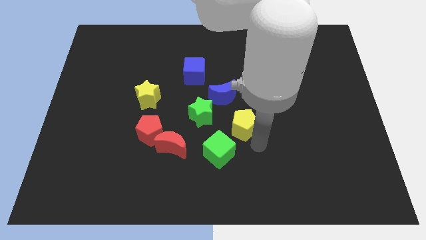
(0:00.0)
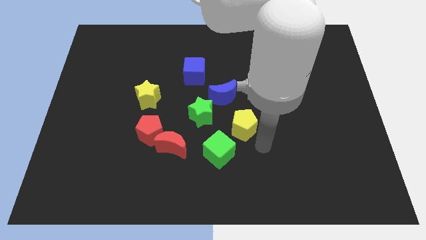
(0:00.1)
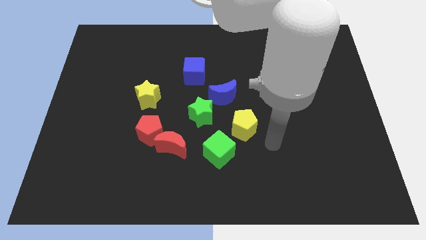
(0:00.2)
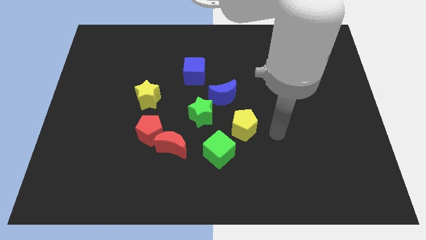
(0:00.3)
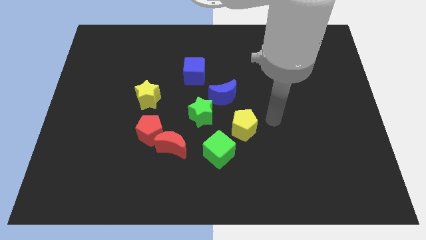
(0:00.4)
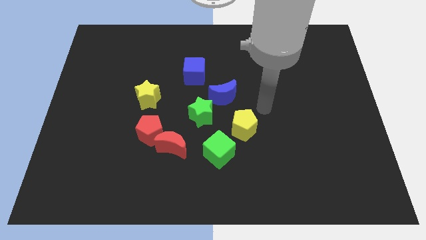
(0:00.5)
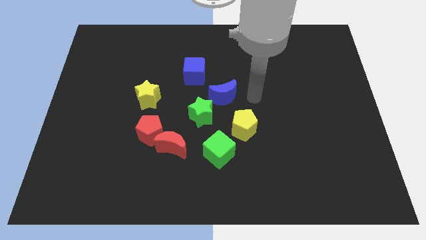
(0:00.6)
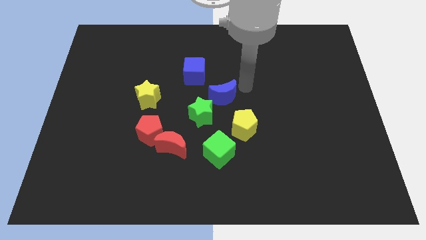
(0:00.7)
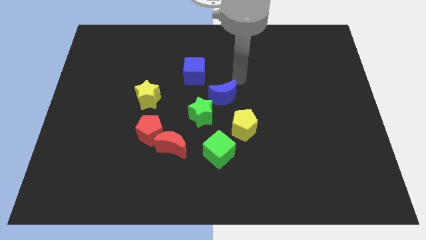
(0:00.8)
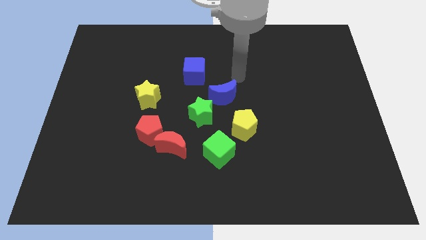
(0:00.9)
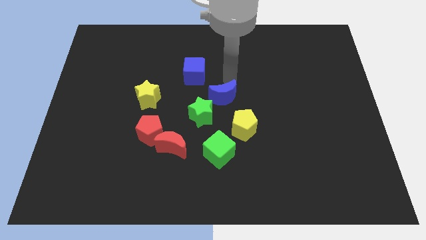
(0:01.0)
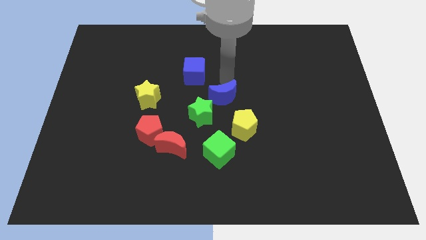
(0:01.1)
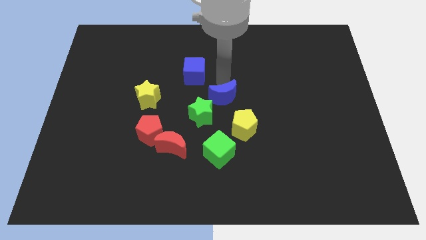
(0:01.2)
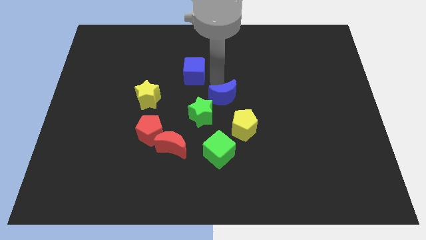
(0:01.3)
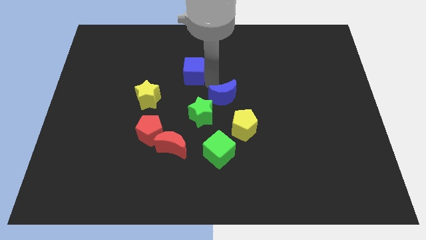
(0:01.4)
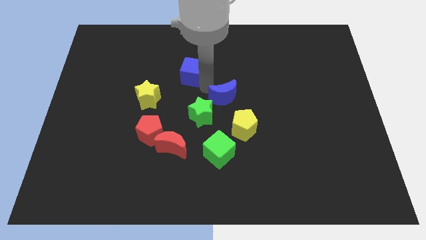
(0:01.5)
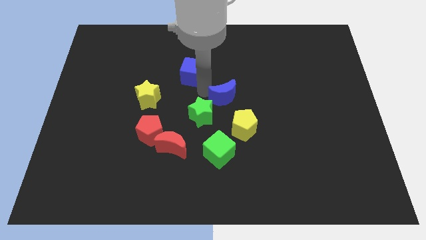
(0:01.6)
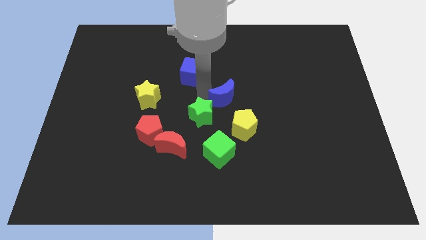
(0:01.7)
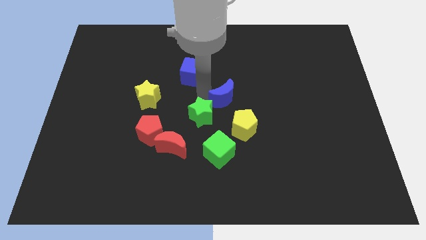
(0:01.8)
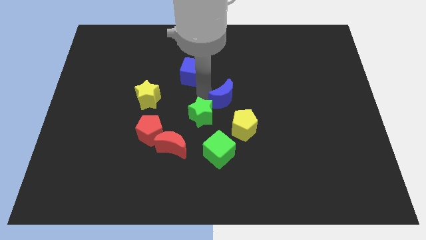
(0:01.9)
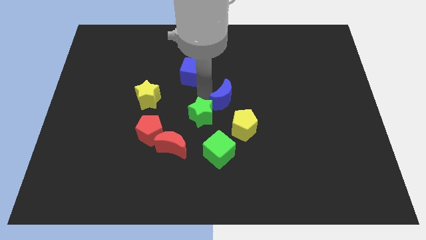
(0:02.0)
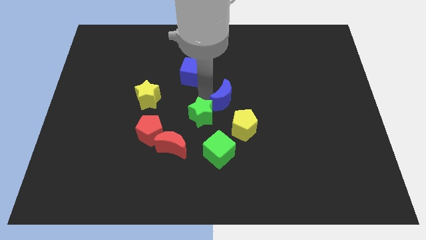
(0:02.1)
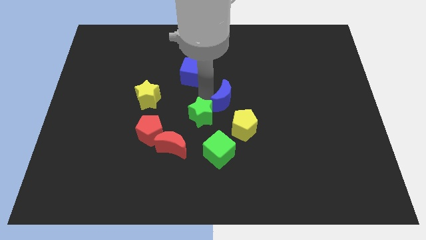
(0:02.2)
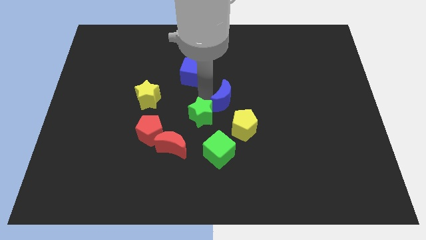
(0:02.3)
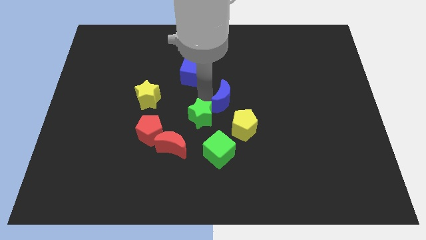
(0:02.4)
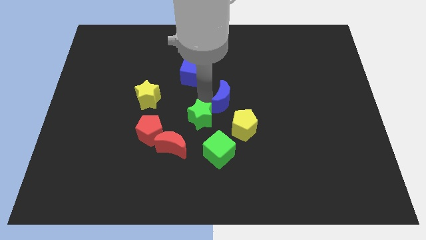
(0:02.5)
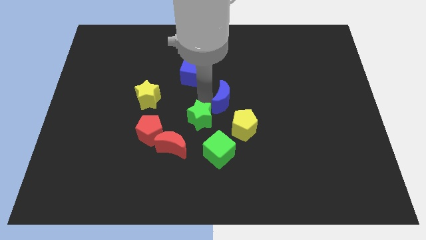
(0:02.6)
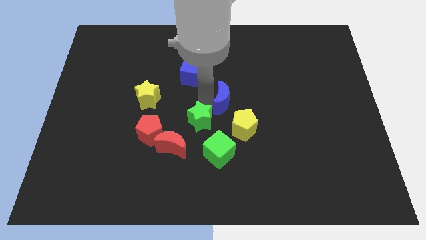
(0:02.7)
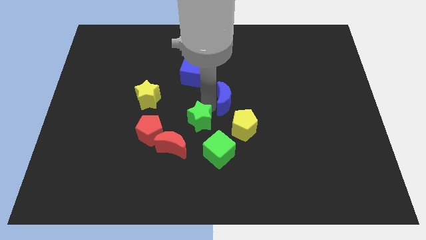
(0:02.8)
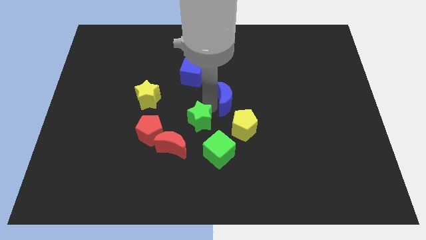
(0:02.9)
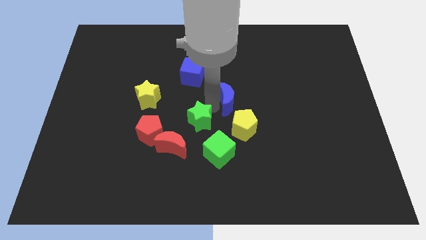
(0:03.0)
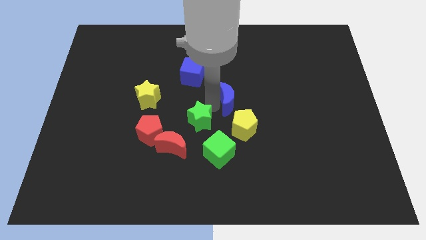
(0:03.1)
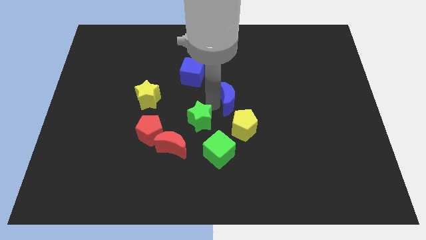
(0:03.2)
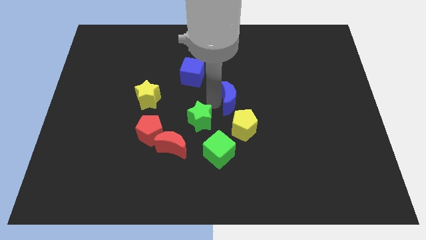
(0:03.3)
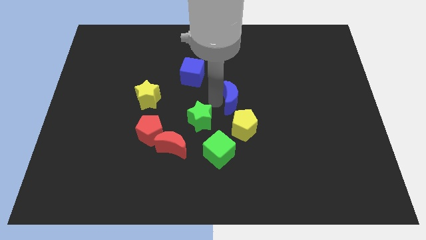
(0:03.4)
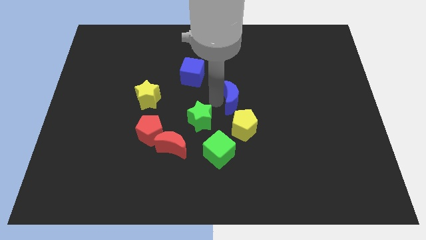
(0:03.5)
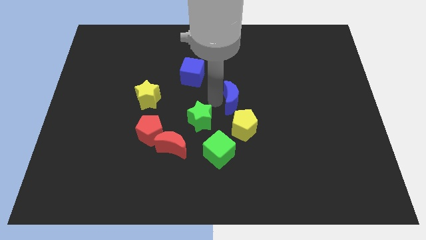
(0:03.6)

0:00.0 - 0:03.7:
separate the blue moon and green star

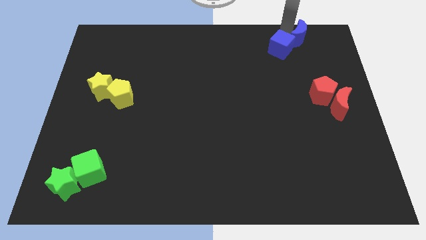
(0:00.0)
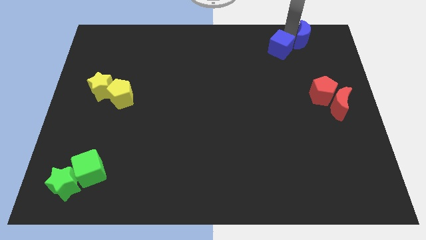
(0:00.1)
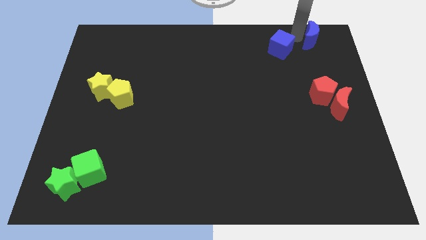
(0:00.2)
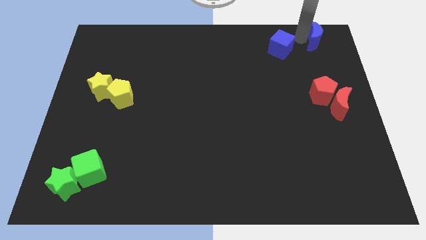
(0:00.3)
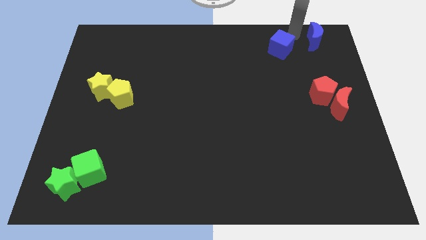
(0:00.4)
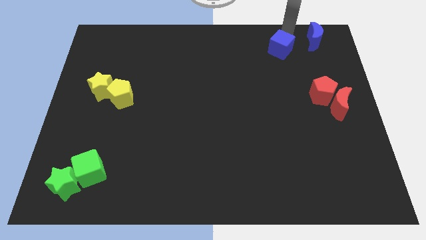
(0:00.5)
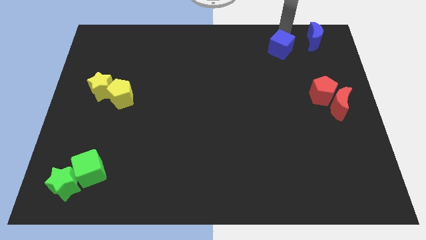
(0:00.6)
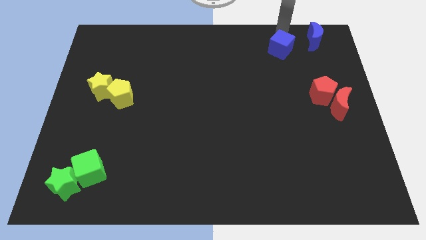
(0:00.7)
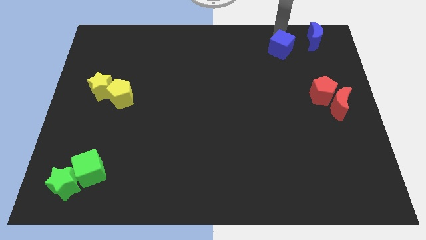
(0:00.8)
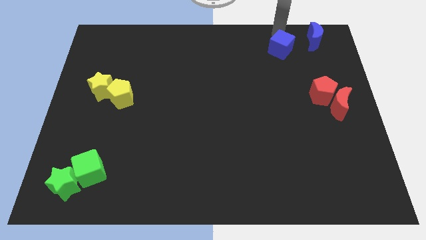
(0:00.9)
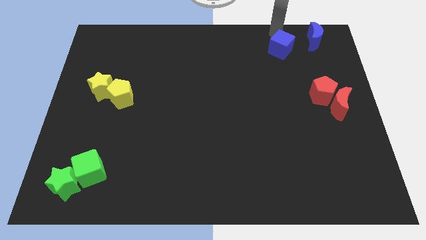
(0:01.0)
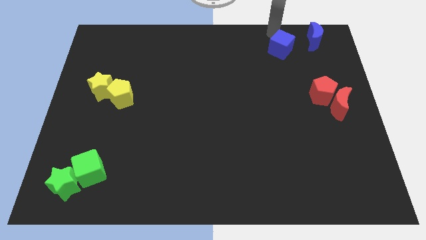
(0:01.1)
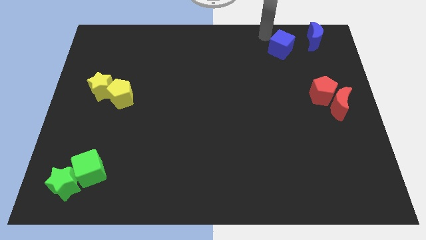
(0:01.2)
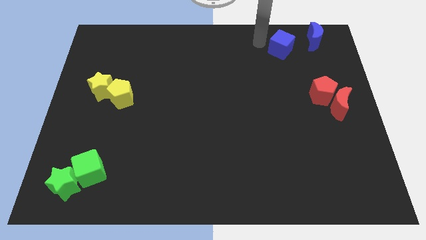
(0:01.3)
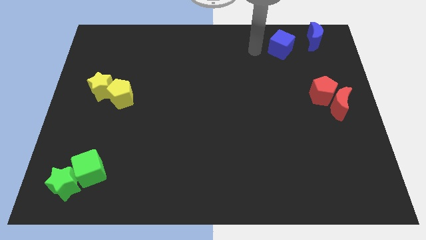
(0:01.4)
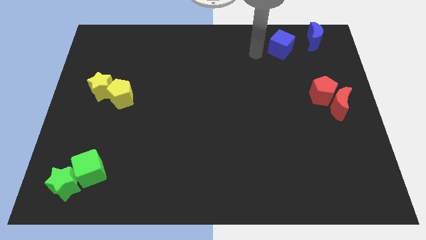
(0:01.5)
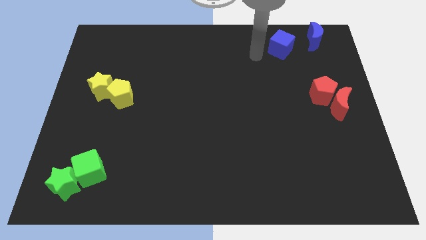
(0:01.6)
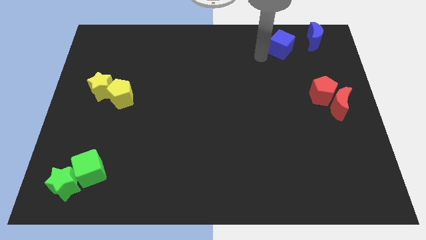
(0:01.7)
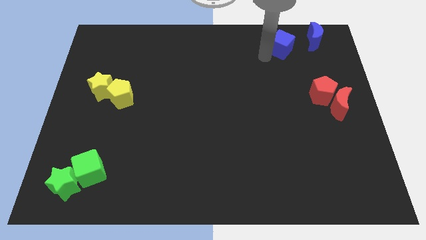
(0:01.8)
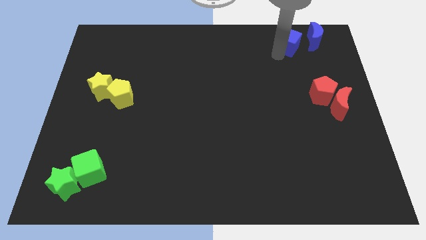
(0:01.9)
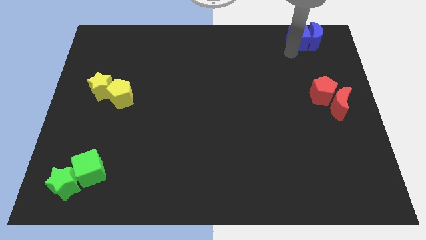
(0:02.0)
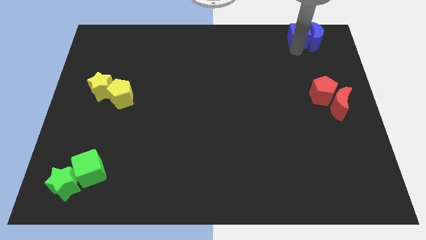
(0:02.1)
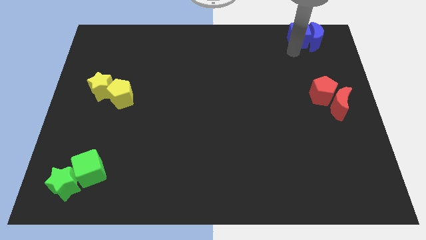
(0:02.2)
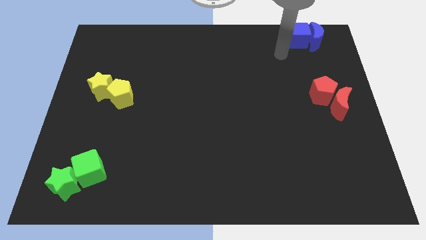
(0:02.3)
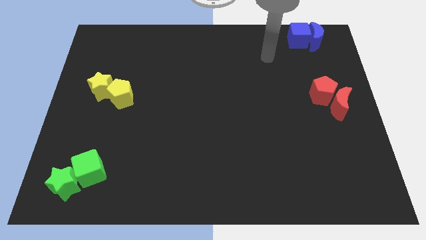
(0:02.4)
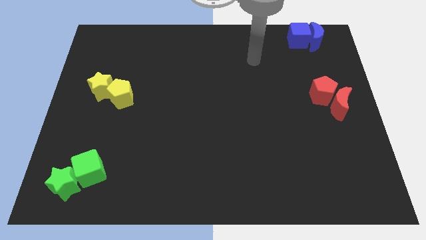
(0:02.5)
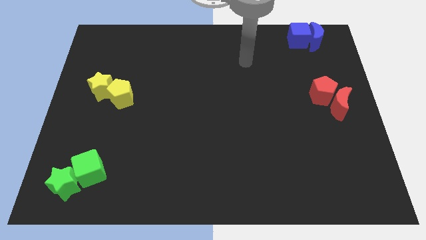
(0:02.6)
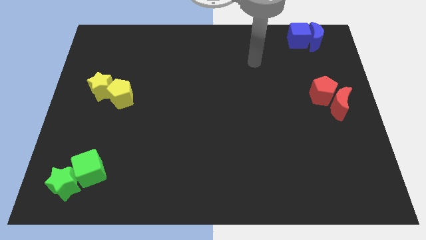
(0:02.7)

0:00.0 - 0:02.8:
move the blue cube to the left side of the blue crescent

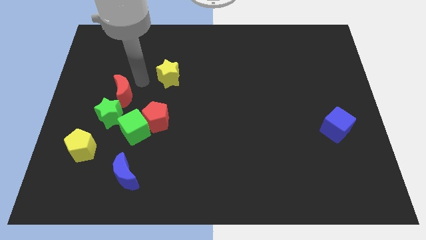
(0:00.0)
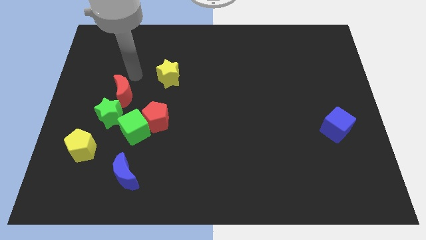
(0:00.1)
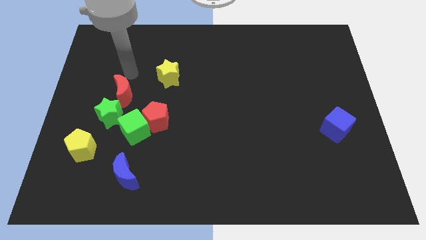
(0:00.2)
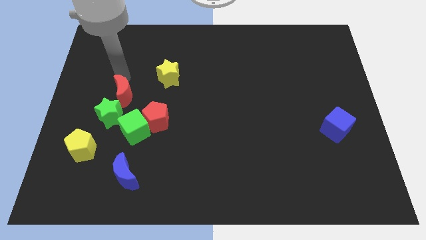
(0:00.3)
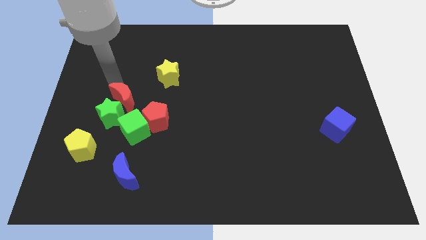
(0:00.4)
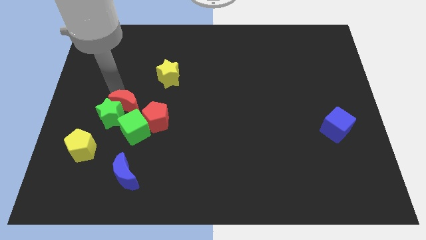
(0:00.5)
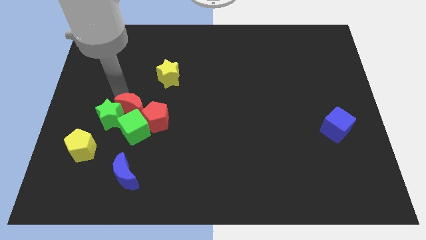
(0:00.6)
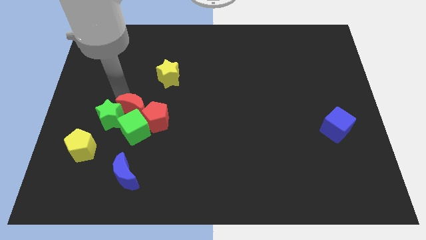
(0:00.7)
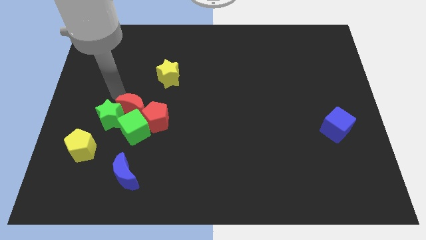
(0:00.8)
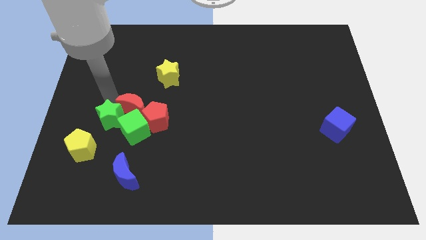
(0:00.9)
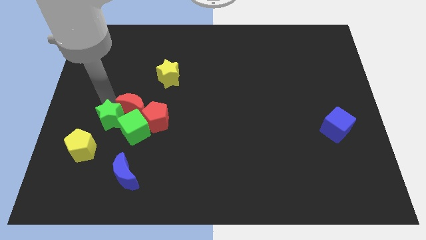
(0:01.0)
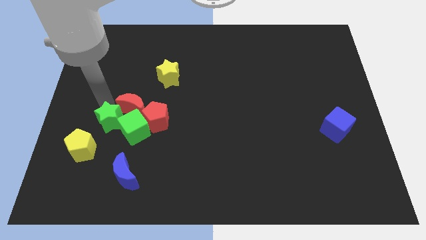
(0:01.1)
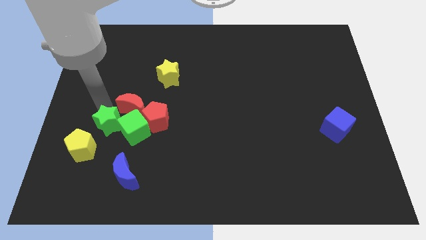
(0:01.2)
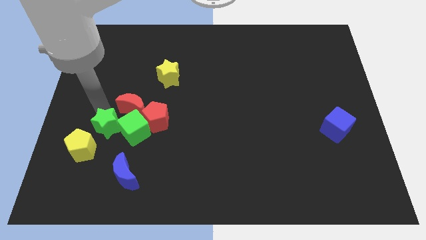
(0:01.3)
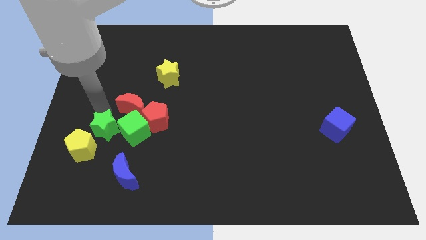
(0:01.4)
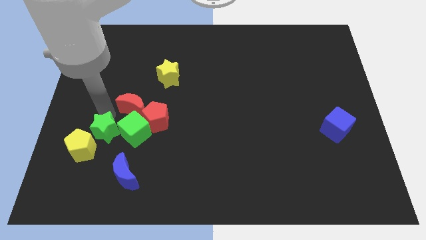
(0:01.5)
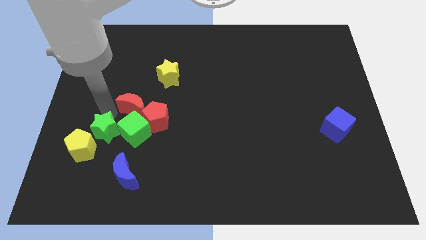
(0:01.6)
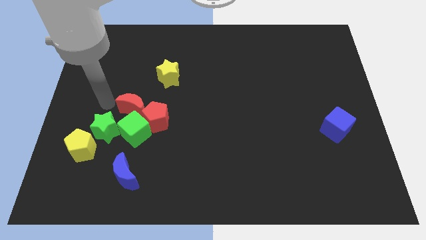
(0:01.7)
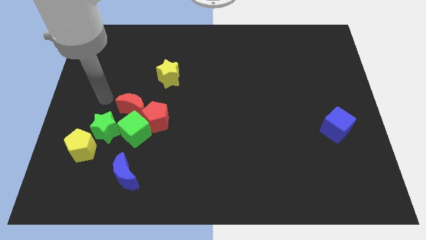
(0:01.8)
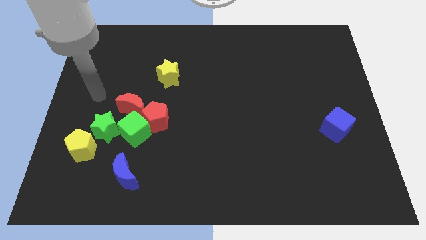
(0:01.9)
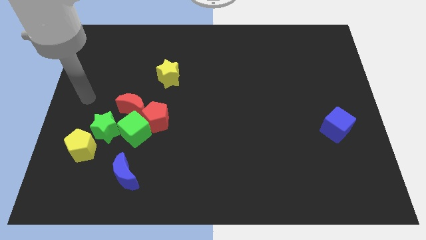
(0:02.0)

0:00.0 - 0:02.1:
push the red crescent towards the top of the green cube

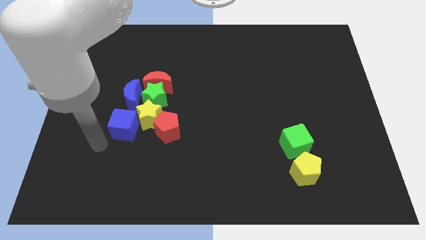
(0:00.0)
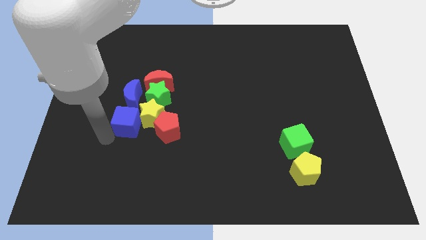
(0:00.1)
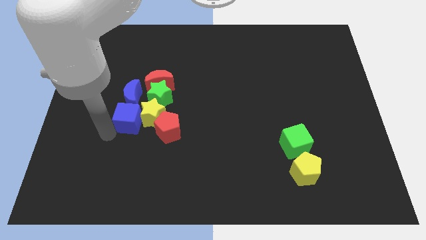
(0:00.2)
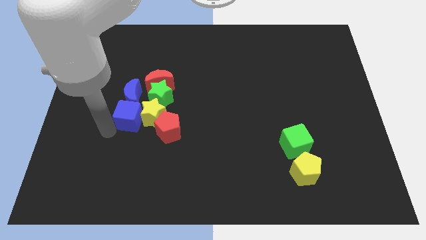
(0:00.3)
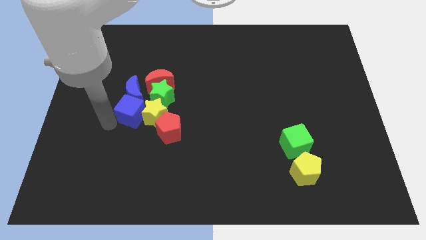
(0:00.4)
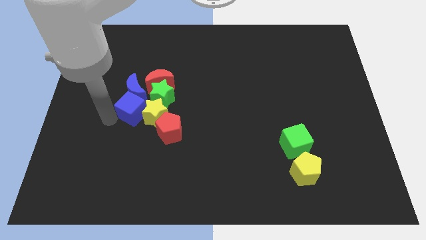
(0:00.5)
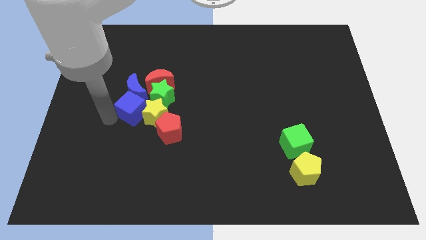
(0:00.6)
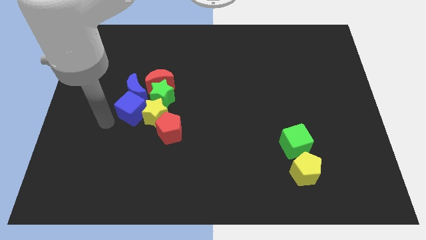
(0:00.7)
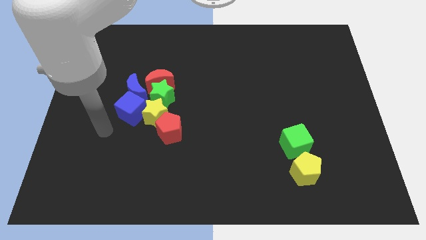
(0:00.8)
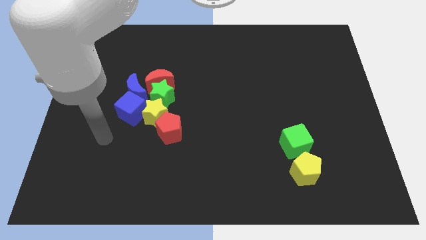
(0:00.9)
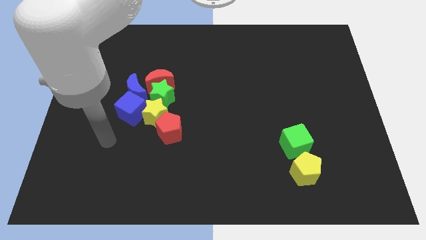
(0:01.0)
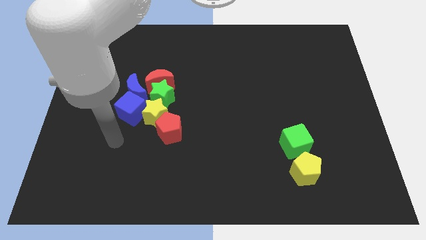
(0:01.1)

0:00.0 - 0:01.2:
push the blue cube into the blue moon
